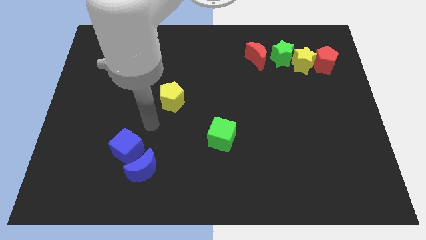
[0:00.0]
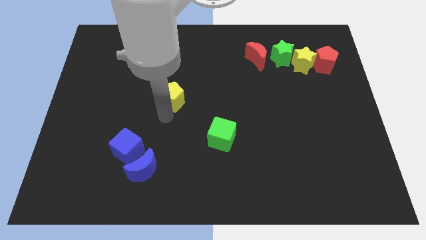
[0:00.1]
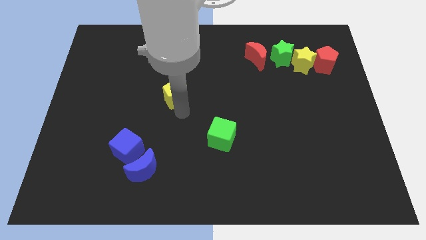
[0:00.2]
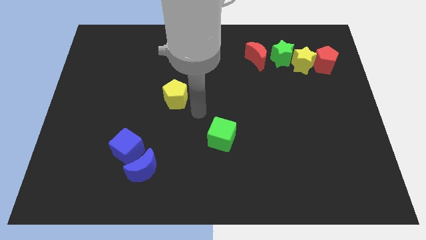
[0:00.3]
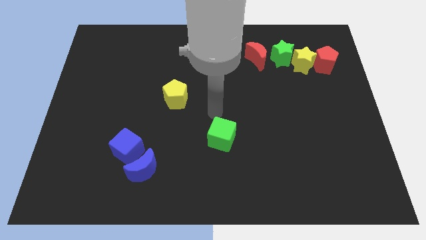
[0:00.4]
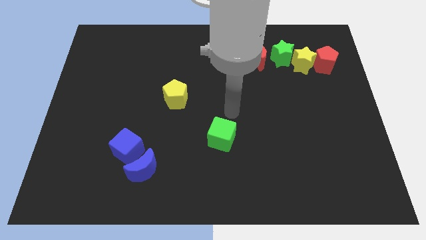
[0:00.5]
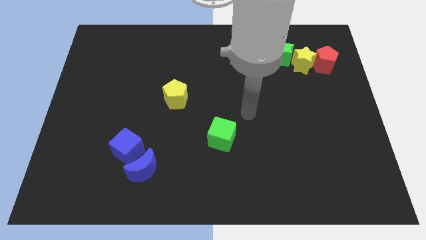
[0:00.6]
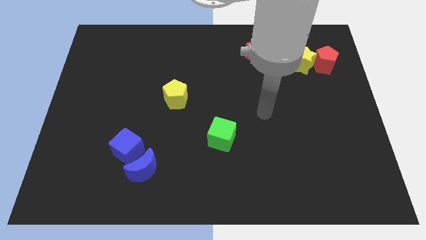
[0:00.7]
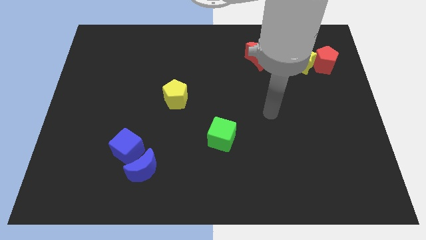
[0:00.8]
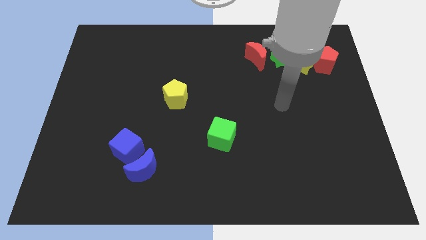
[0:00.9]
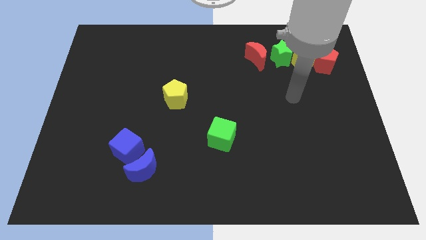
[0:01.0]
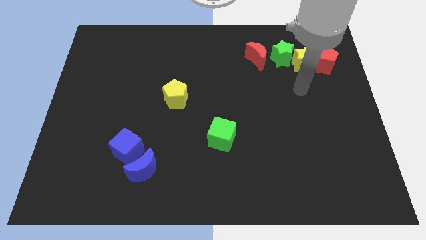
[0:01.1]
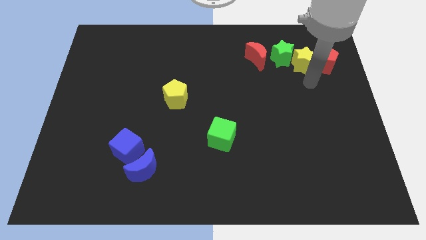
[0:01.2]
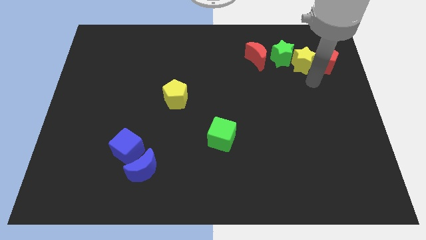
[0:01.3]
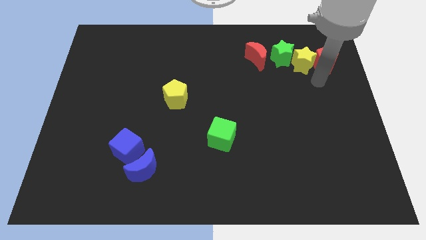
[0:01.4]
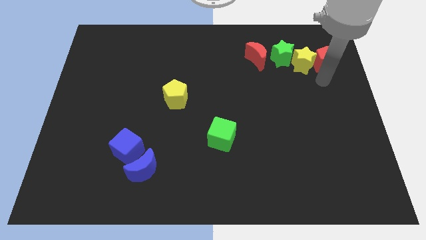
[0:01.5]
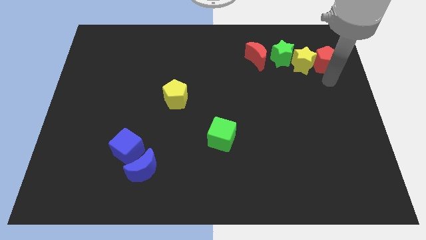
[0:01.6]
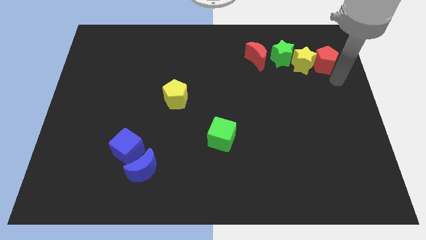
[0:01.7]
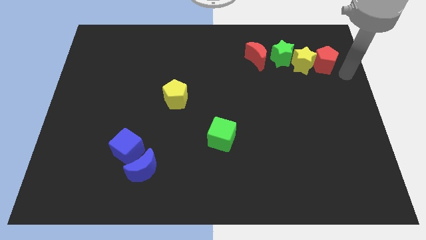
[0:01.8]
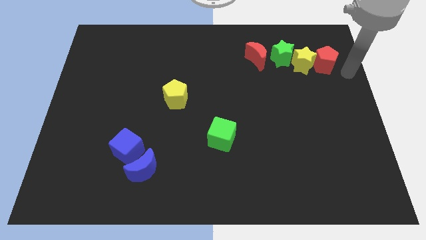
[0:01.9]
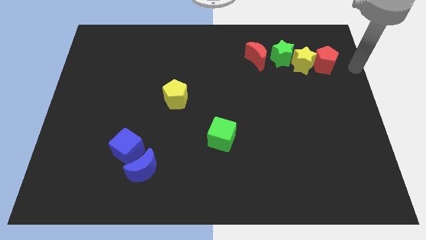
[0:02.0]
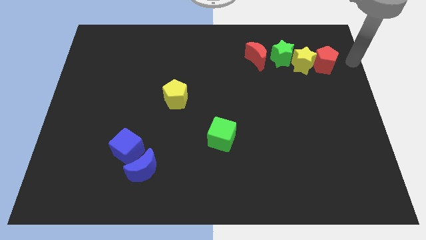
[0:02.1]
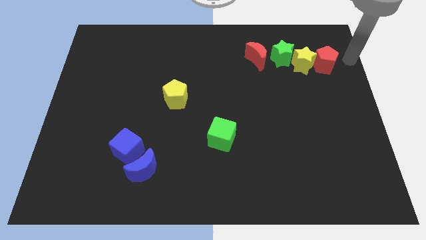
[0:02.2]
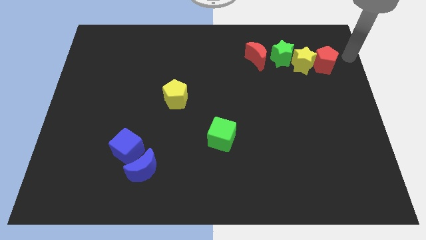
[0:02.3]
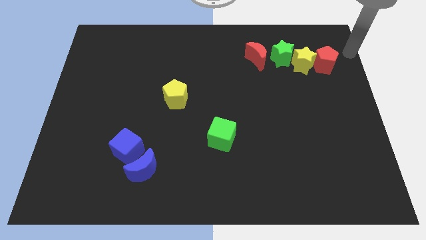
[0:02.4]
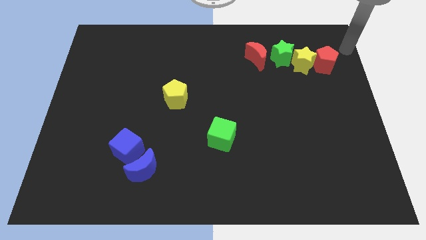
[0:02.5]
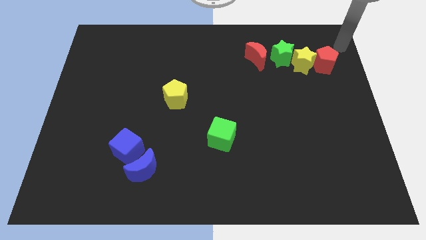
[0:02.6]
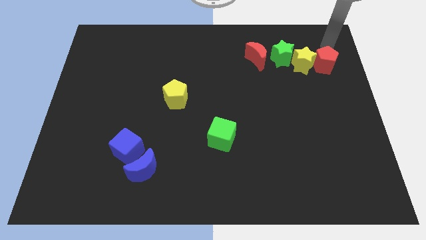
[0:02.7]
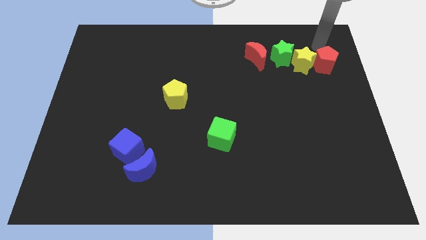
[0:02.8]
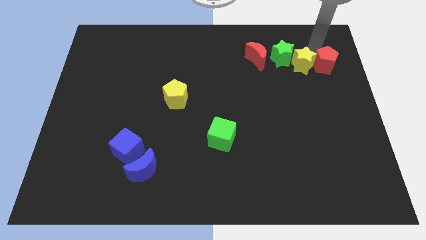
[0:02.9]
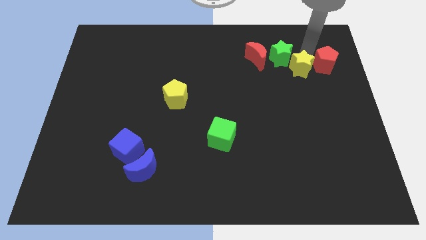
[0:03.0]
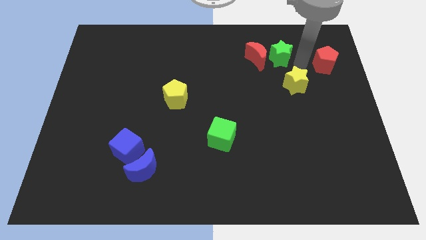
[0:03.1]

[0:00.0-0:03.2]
move your arm towards the top of the yellow star

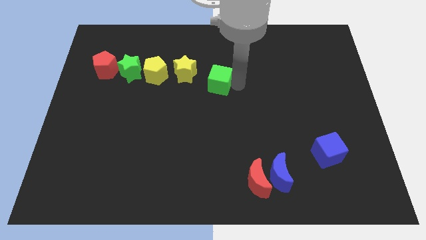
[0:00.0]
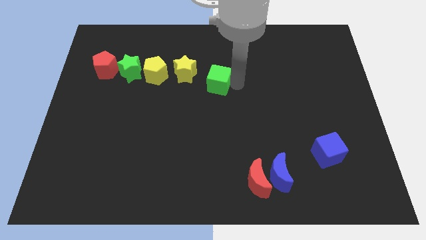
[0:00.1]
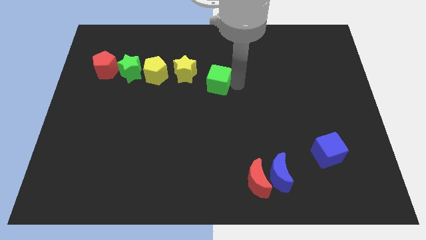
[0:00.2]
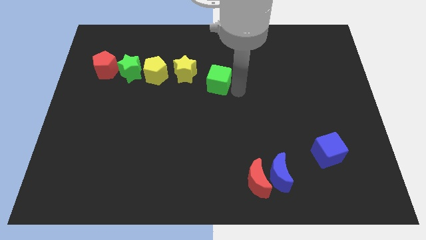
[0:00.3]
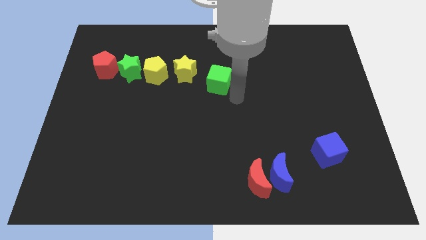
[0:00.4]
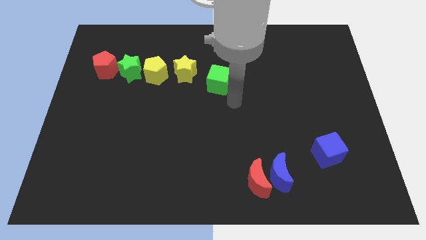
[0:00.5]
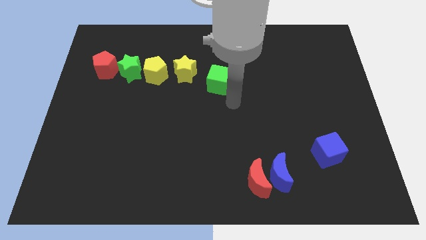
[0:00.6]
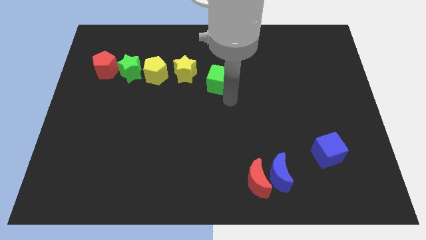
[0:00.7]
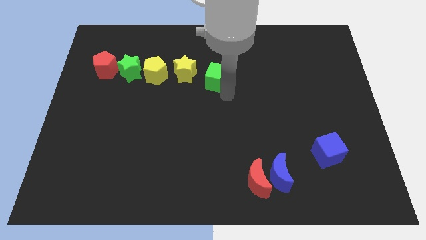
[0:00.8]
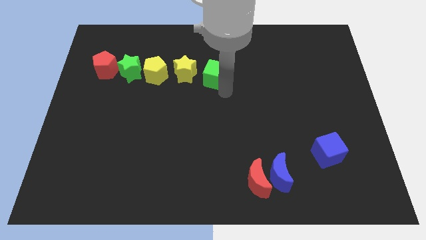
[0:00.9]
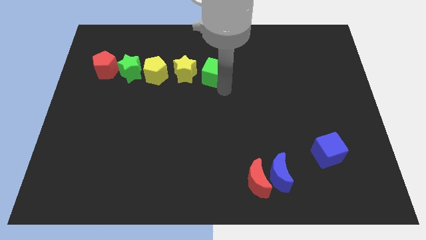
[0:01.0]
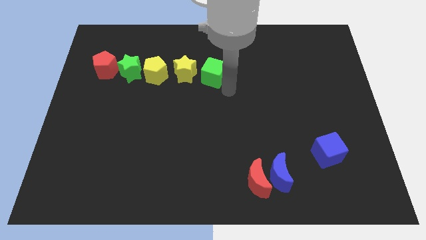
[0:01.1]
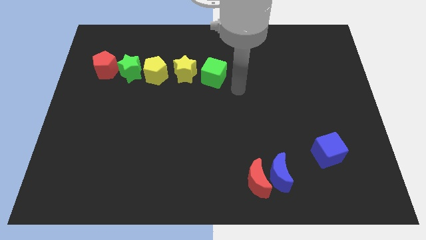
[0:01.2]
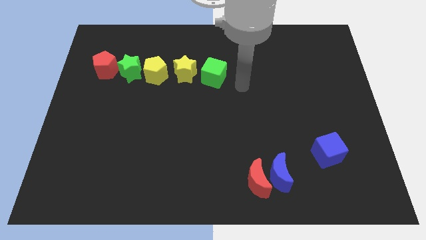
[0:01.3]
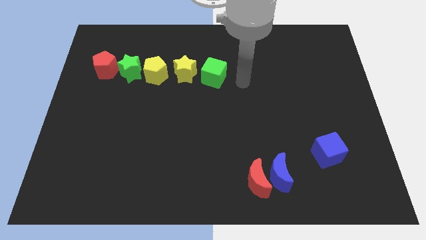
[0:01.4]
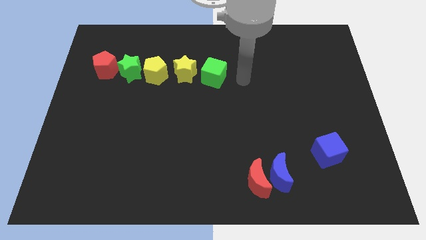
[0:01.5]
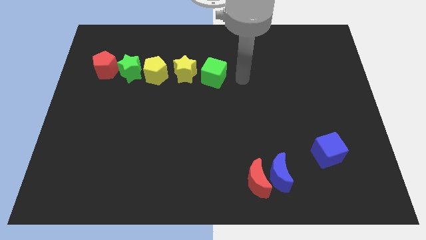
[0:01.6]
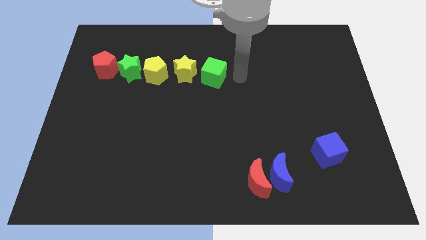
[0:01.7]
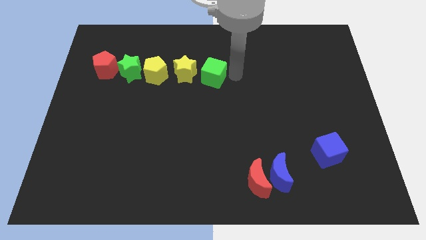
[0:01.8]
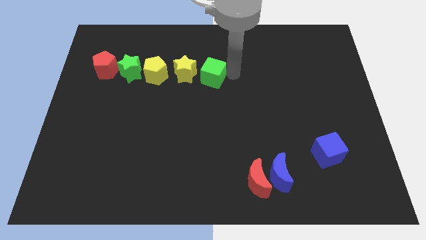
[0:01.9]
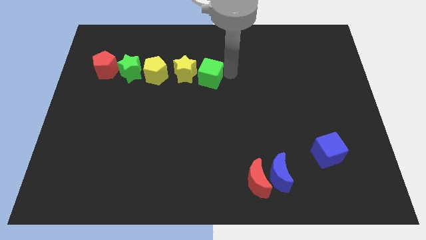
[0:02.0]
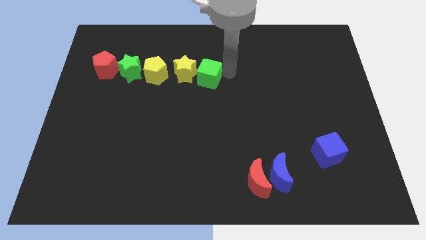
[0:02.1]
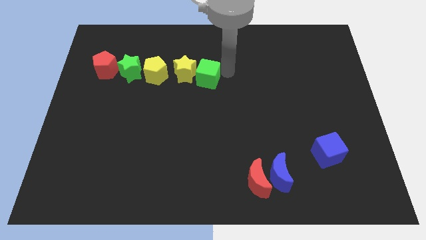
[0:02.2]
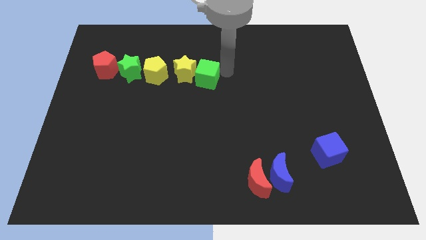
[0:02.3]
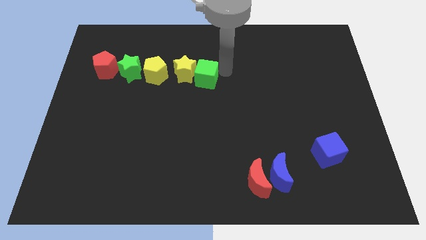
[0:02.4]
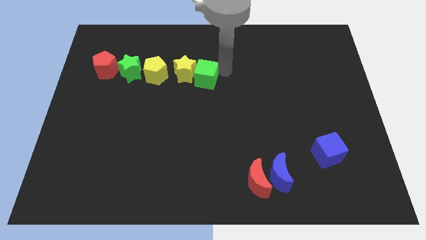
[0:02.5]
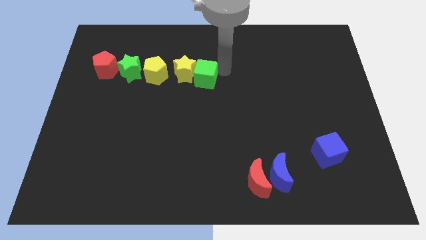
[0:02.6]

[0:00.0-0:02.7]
place green cube beside yellow star

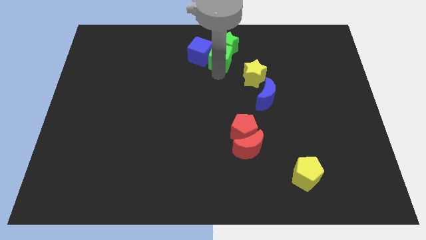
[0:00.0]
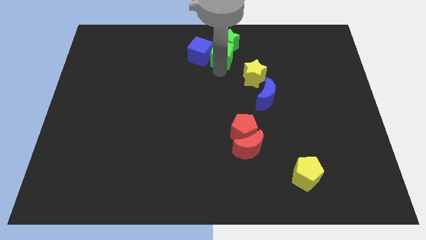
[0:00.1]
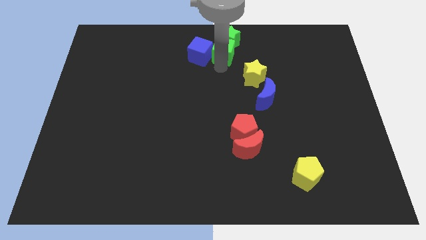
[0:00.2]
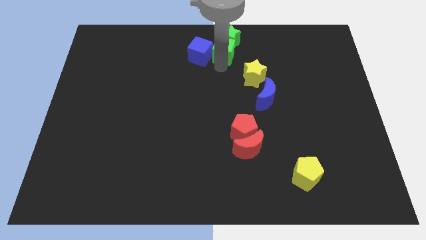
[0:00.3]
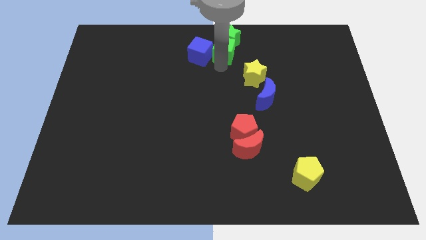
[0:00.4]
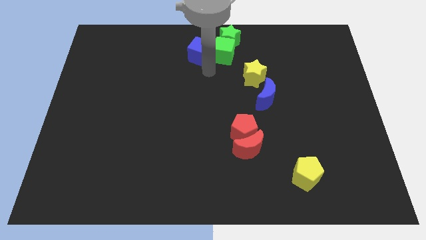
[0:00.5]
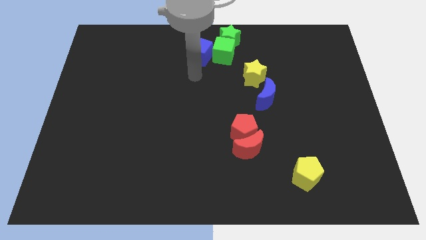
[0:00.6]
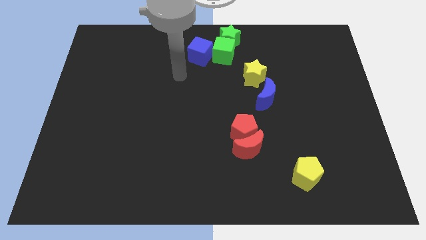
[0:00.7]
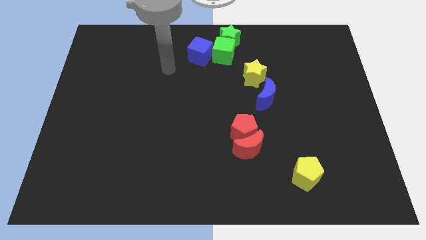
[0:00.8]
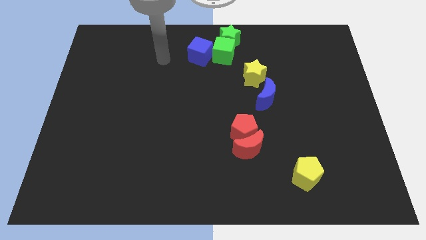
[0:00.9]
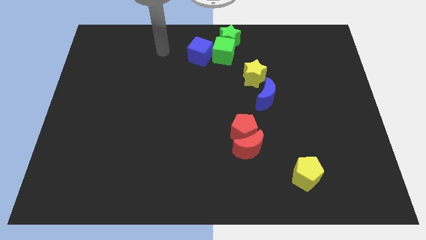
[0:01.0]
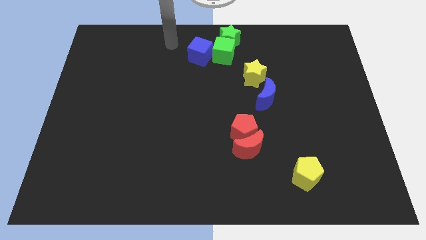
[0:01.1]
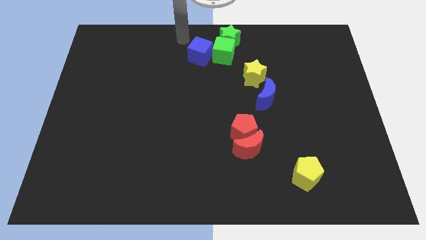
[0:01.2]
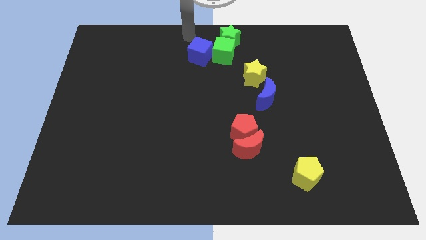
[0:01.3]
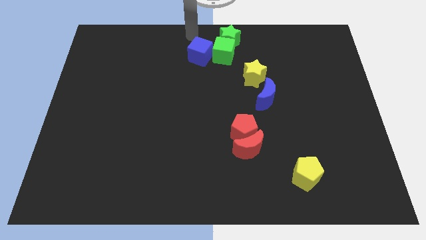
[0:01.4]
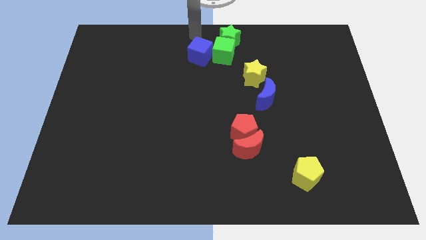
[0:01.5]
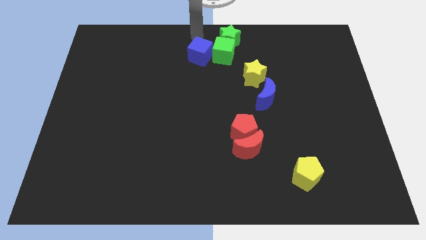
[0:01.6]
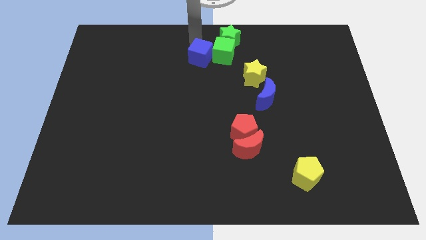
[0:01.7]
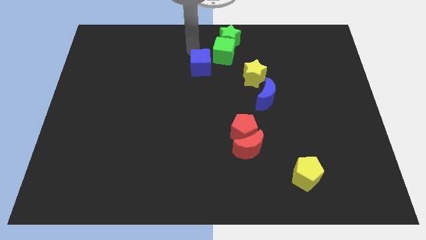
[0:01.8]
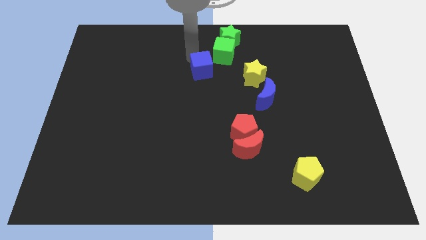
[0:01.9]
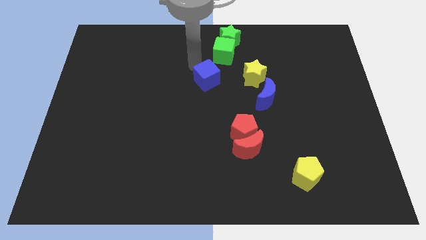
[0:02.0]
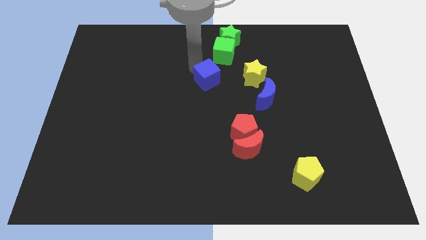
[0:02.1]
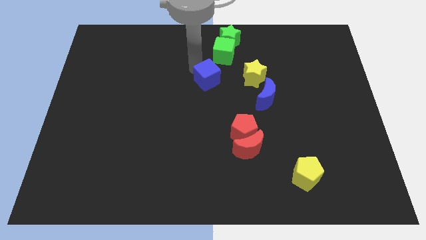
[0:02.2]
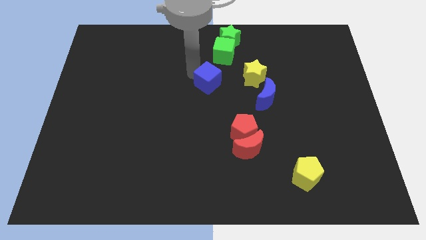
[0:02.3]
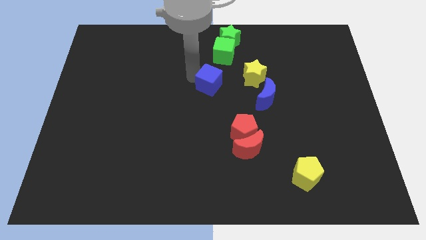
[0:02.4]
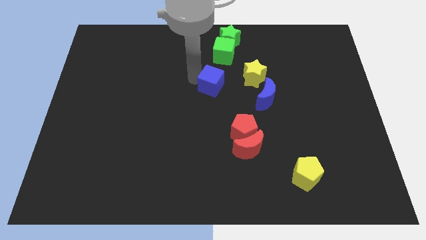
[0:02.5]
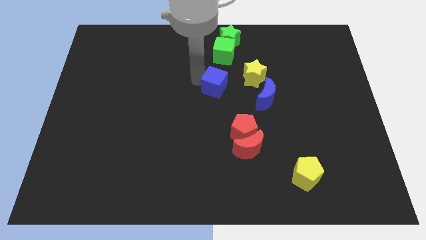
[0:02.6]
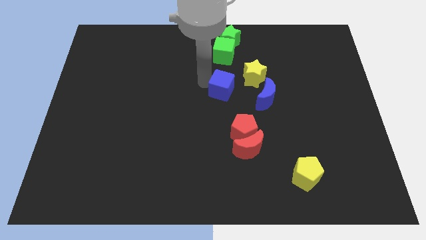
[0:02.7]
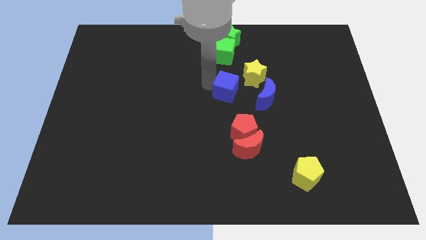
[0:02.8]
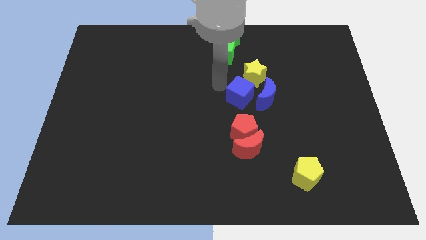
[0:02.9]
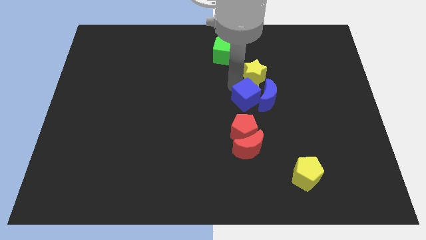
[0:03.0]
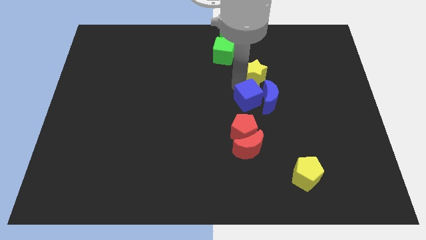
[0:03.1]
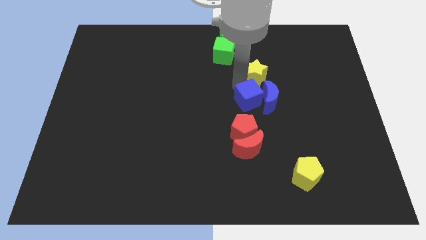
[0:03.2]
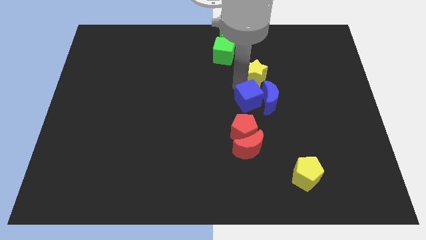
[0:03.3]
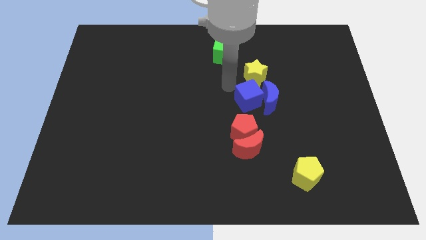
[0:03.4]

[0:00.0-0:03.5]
drag the blue cube into the blue crescent
